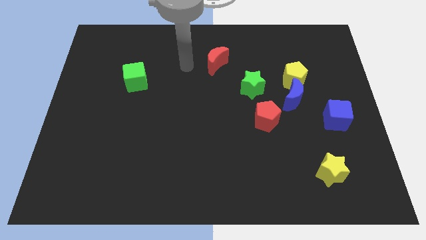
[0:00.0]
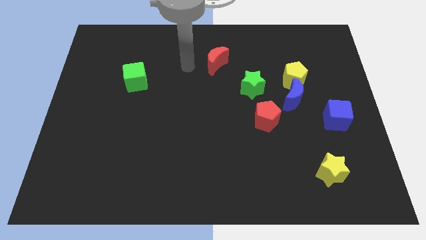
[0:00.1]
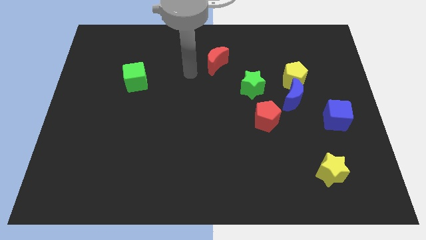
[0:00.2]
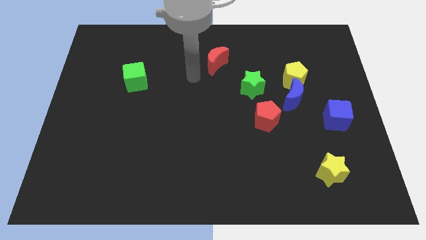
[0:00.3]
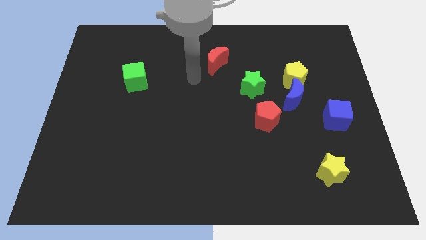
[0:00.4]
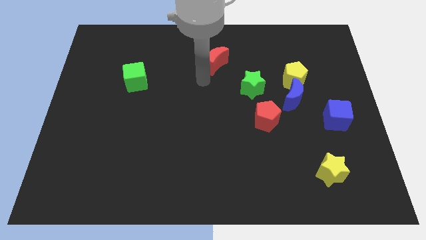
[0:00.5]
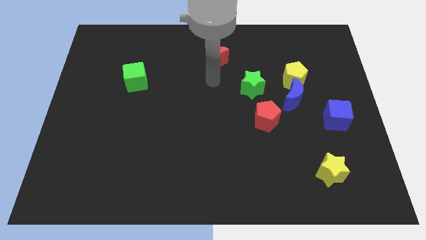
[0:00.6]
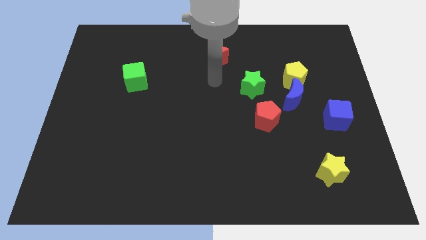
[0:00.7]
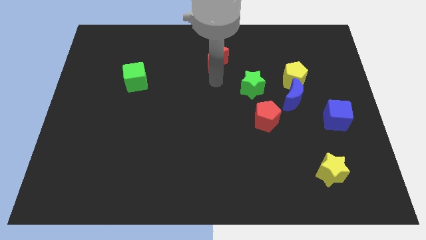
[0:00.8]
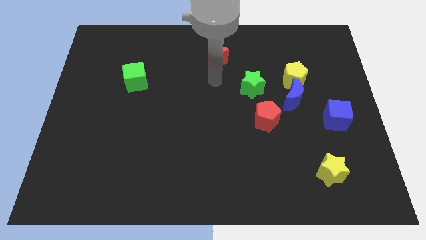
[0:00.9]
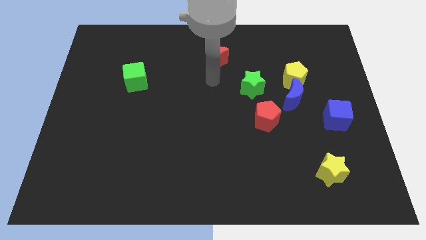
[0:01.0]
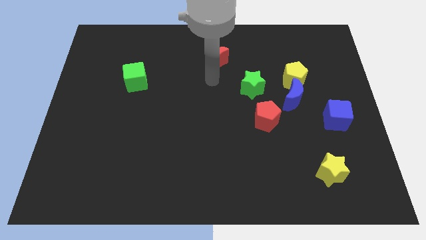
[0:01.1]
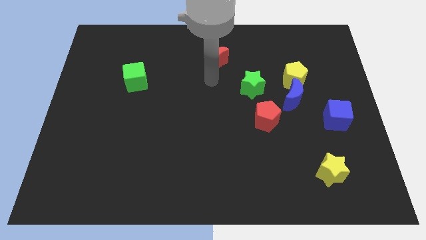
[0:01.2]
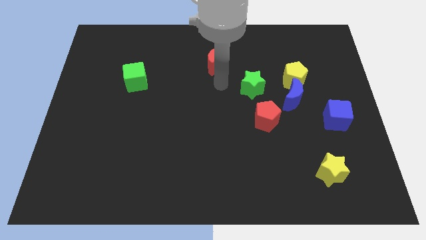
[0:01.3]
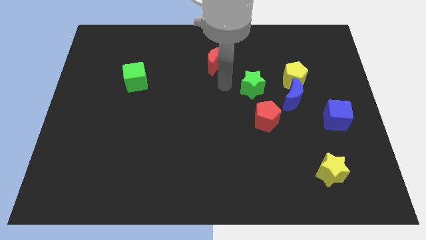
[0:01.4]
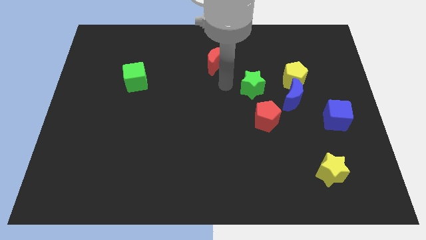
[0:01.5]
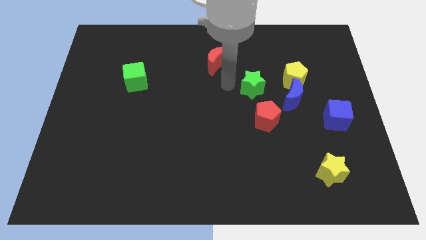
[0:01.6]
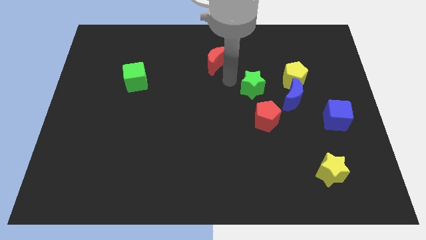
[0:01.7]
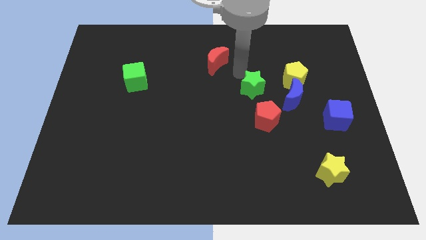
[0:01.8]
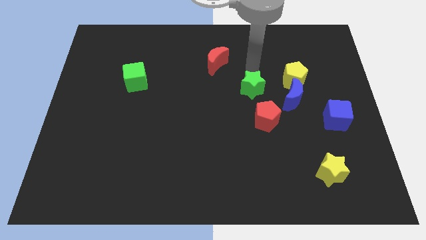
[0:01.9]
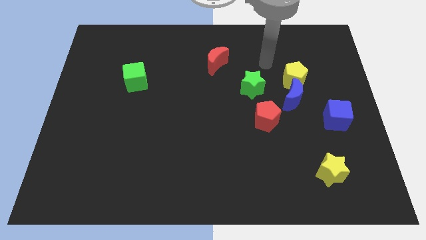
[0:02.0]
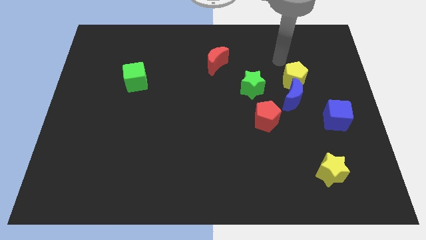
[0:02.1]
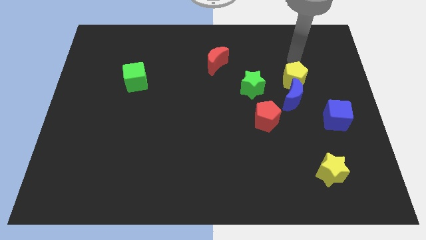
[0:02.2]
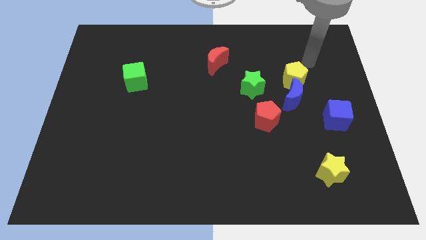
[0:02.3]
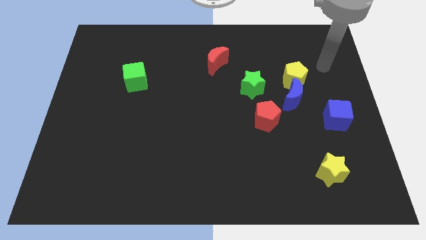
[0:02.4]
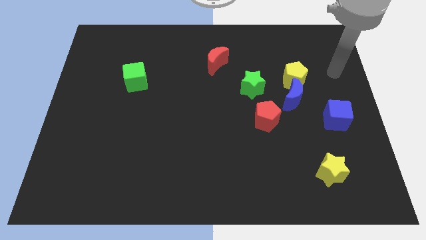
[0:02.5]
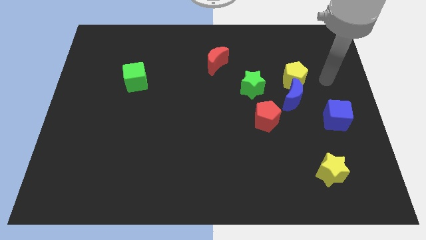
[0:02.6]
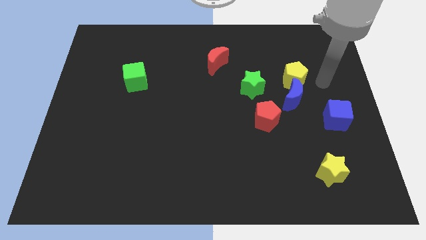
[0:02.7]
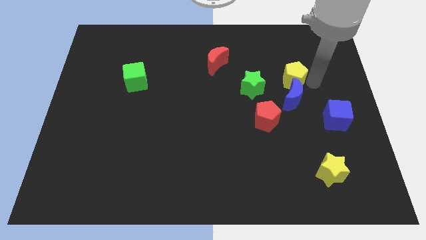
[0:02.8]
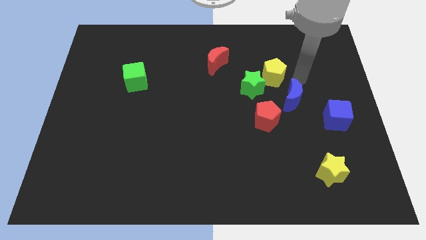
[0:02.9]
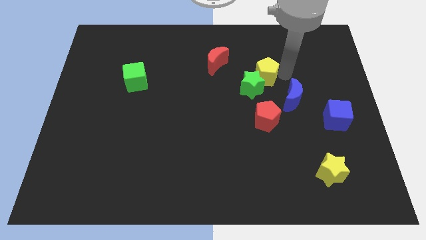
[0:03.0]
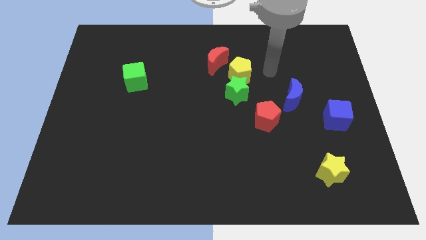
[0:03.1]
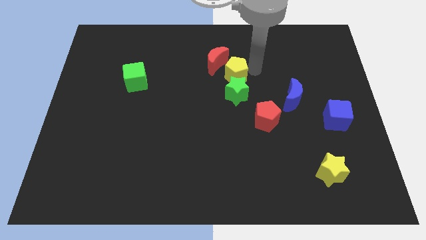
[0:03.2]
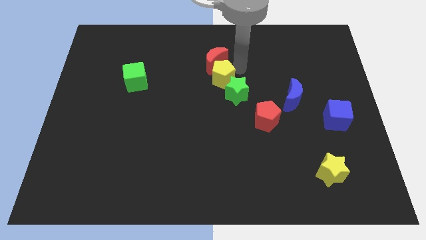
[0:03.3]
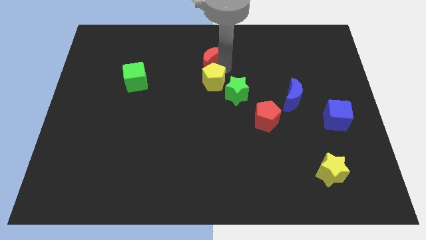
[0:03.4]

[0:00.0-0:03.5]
place the yellow pentagon between red moon and green star

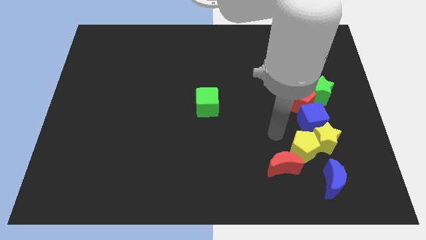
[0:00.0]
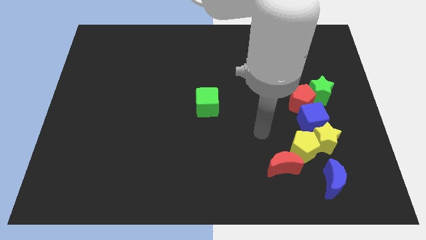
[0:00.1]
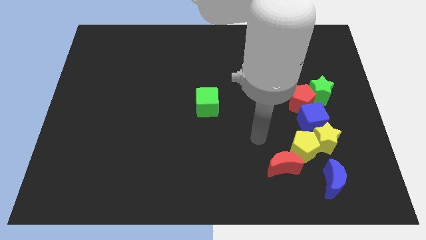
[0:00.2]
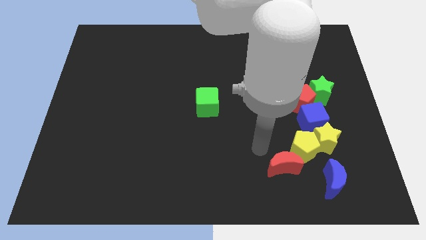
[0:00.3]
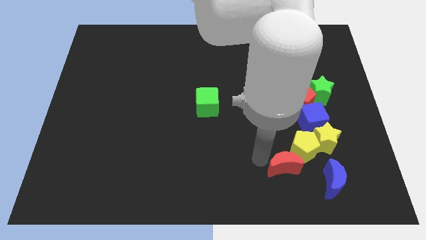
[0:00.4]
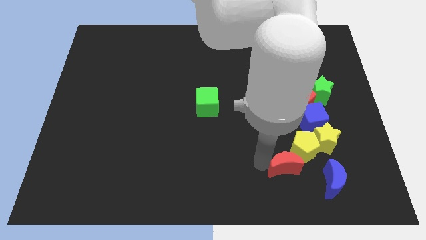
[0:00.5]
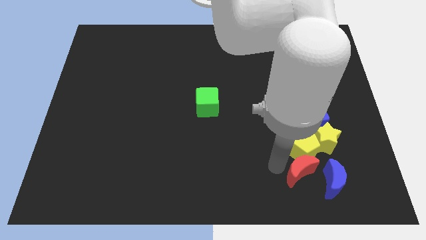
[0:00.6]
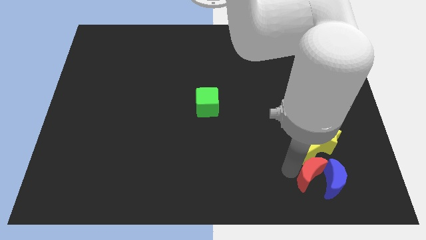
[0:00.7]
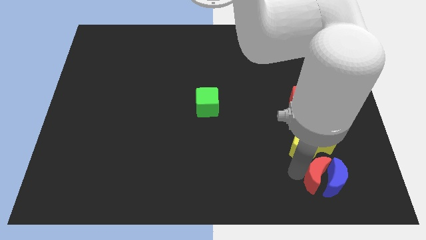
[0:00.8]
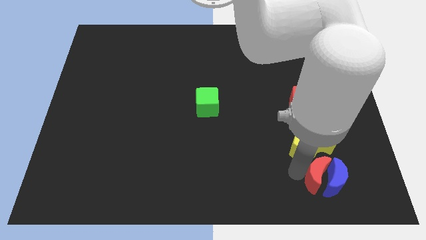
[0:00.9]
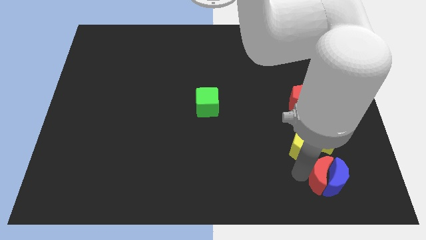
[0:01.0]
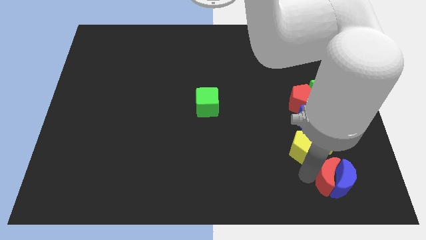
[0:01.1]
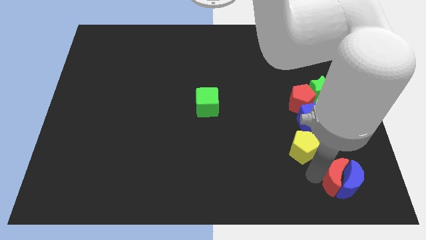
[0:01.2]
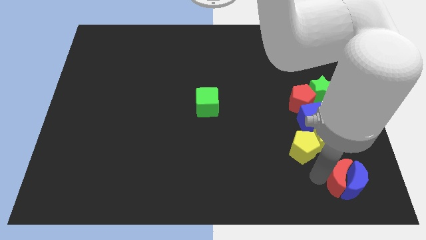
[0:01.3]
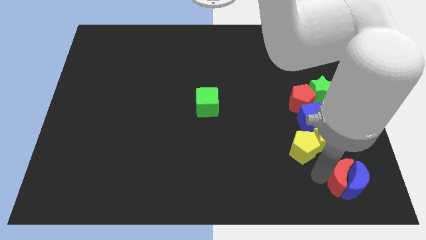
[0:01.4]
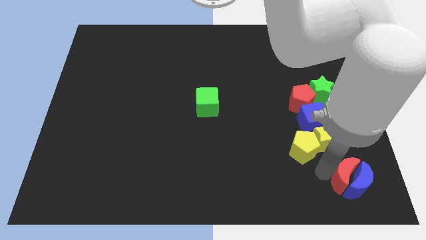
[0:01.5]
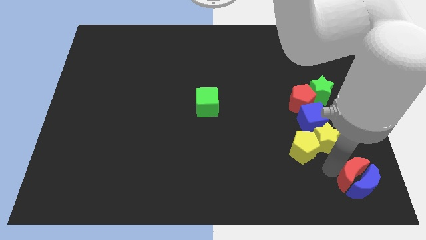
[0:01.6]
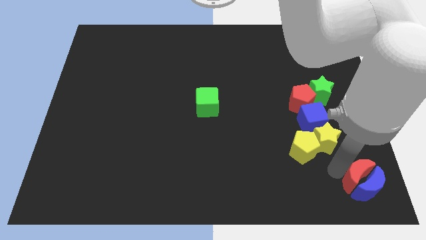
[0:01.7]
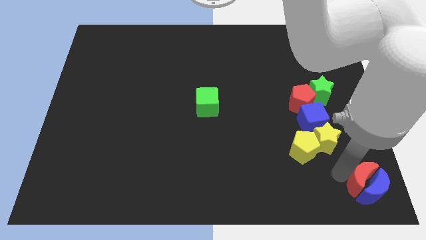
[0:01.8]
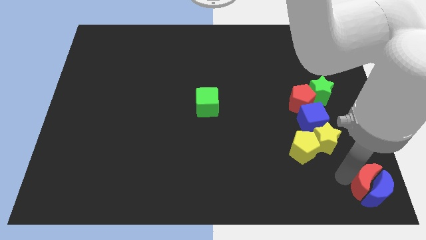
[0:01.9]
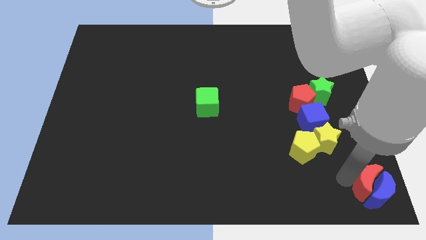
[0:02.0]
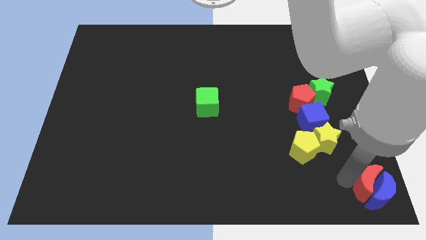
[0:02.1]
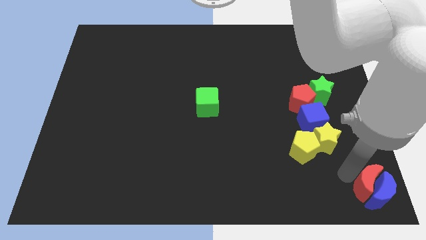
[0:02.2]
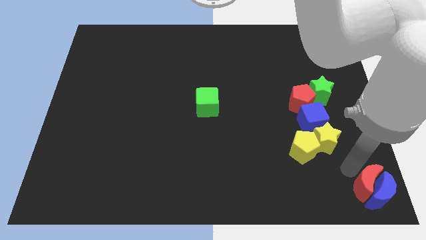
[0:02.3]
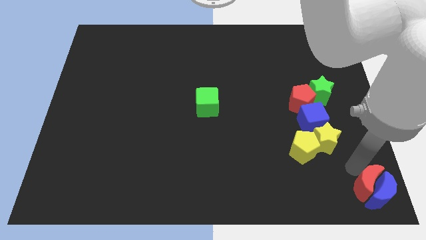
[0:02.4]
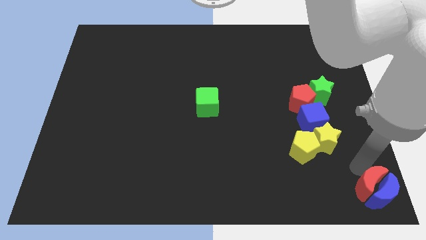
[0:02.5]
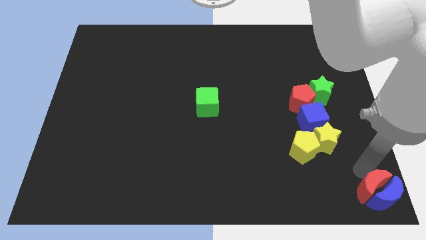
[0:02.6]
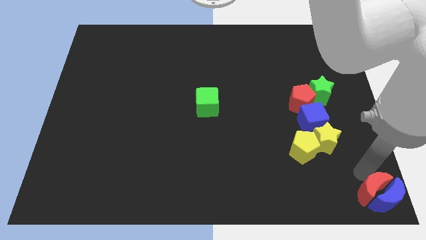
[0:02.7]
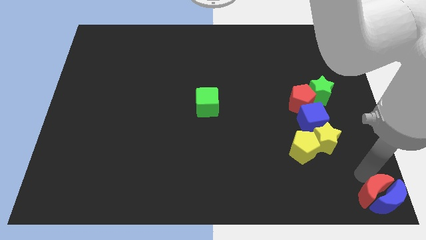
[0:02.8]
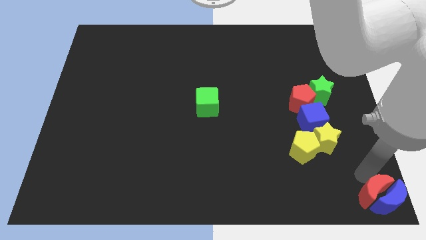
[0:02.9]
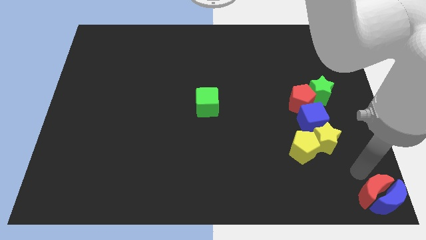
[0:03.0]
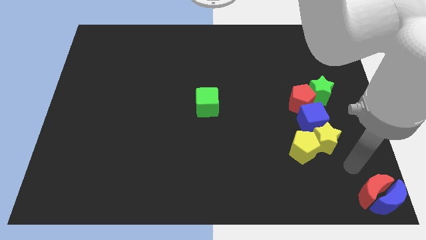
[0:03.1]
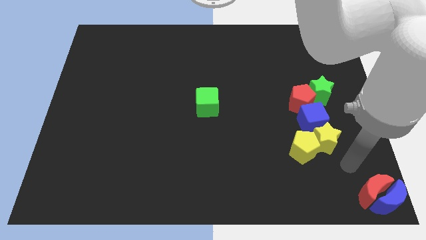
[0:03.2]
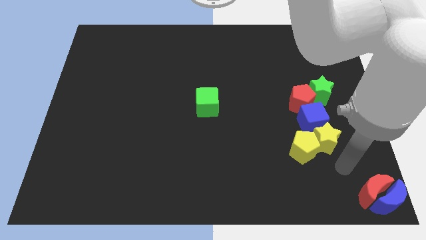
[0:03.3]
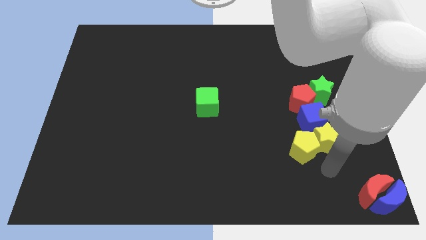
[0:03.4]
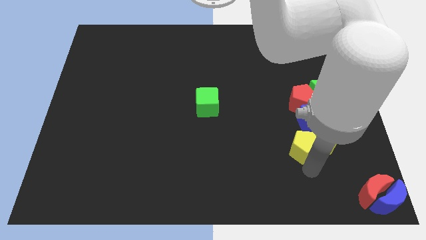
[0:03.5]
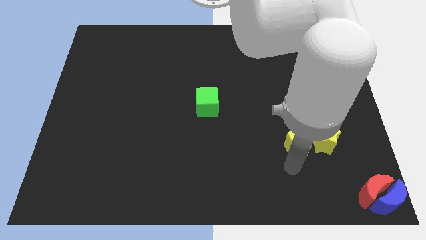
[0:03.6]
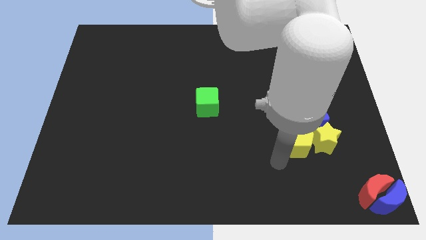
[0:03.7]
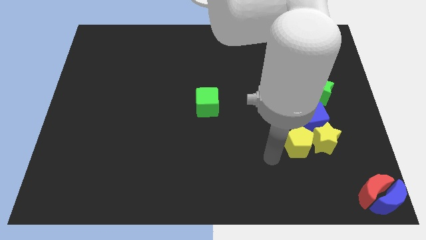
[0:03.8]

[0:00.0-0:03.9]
push the blue crescent with red moon to the bottom right of the board

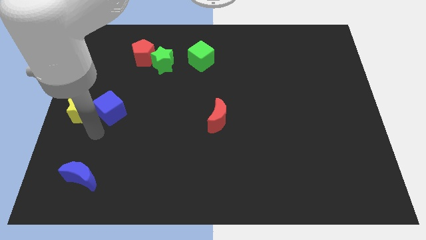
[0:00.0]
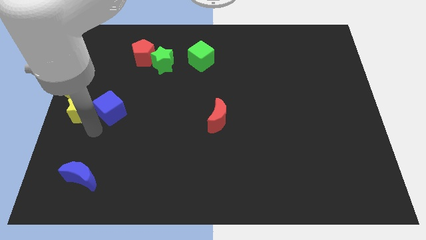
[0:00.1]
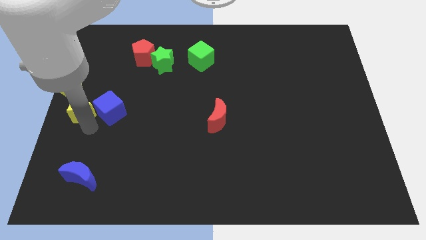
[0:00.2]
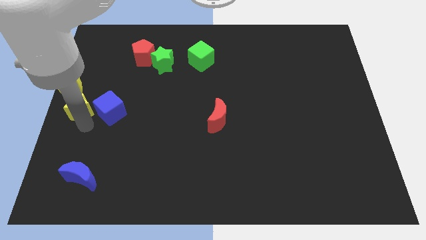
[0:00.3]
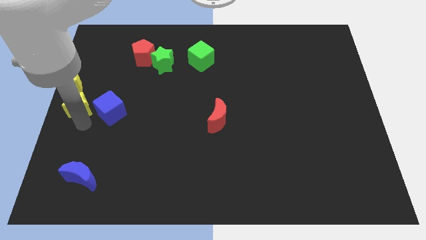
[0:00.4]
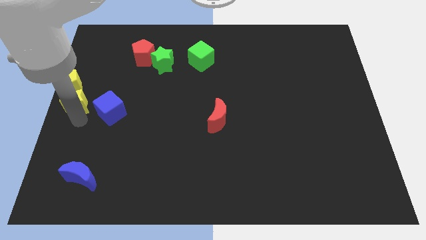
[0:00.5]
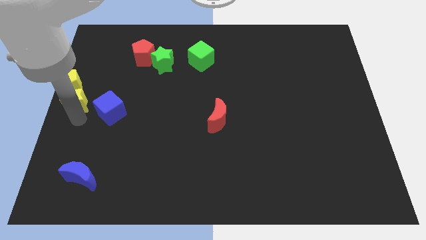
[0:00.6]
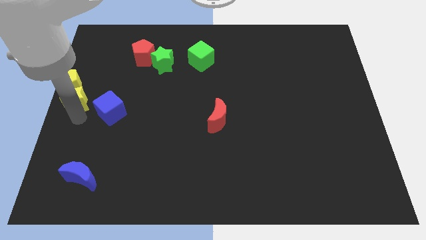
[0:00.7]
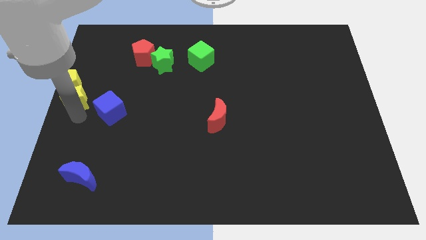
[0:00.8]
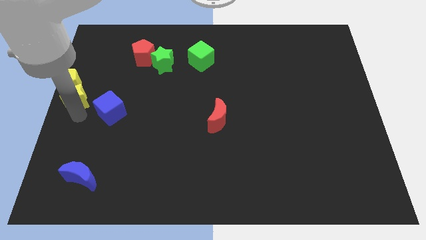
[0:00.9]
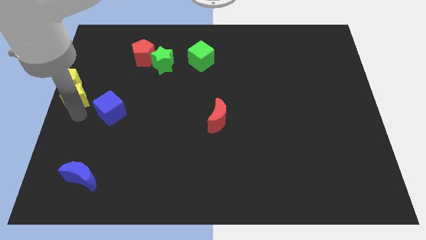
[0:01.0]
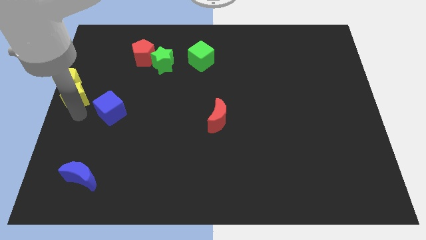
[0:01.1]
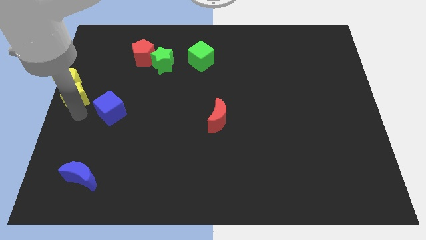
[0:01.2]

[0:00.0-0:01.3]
move the yellow star into the yellow pentagon towards the left center of the board

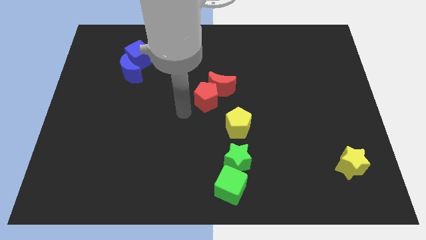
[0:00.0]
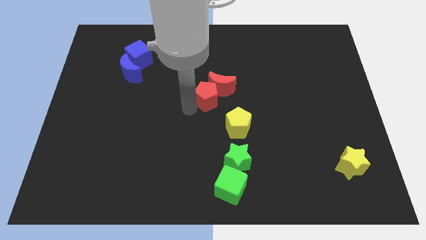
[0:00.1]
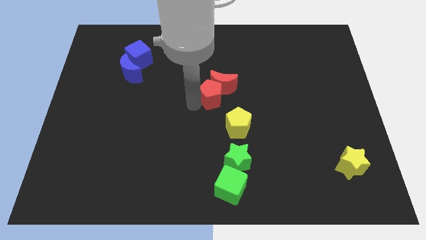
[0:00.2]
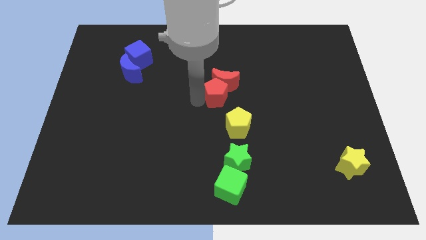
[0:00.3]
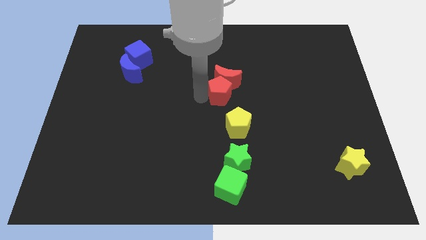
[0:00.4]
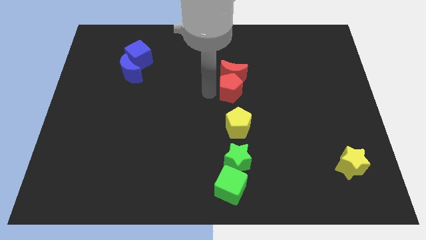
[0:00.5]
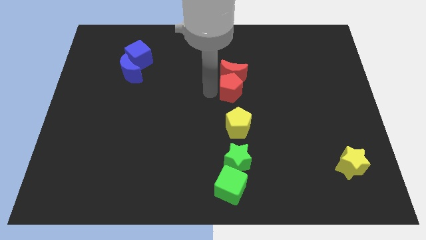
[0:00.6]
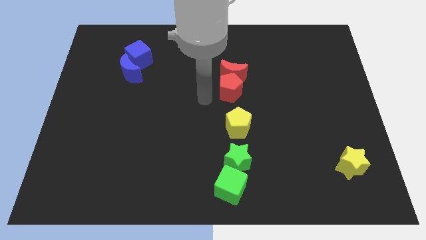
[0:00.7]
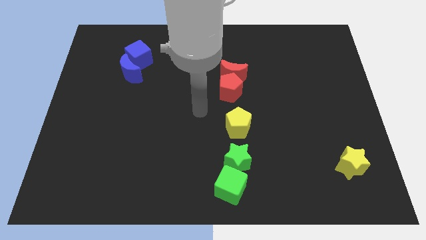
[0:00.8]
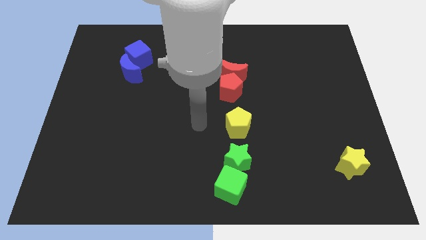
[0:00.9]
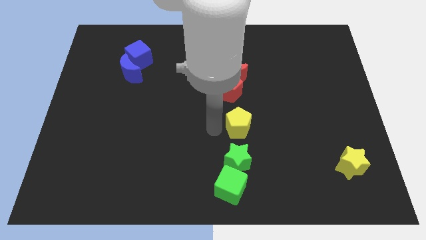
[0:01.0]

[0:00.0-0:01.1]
place the arm to the left side of the yellow pentagon
